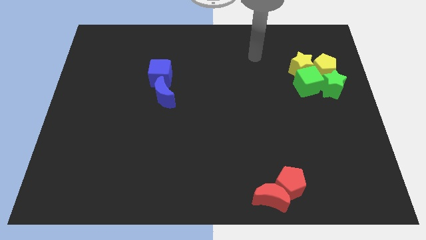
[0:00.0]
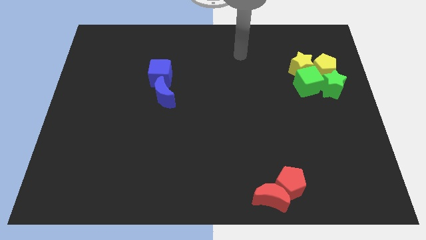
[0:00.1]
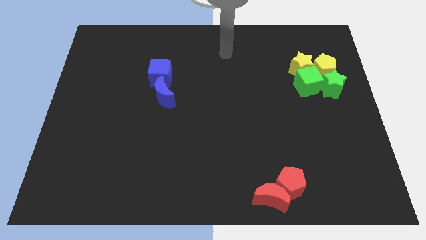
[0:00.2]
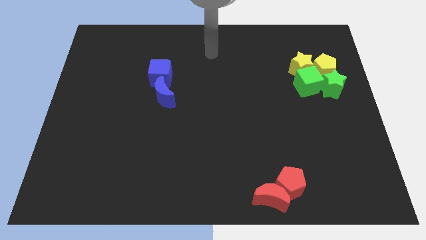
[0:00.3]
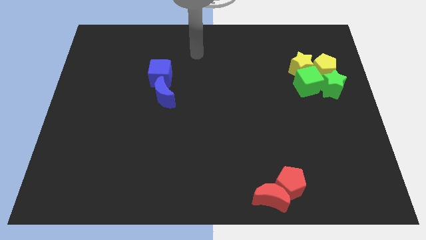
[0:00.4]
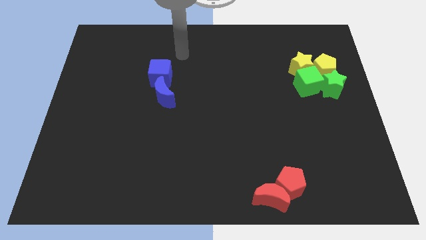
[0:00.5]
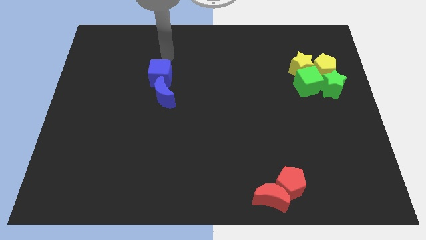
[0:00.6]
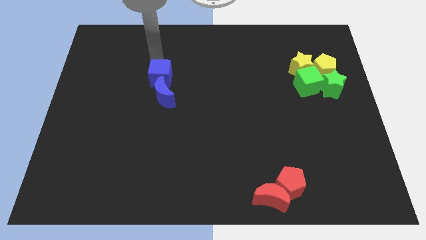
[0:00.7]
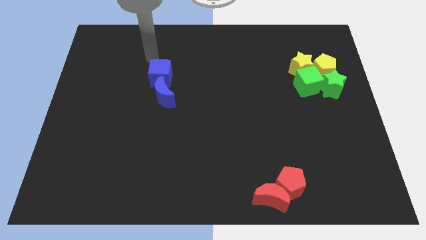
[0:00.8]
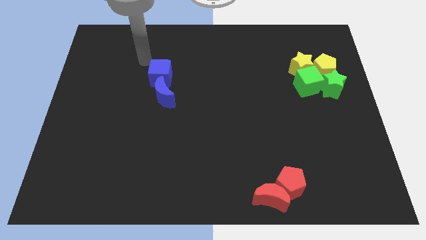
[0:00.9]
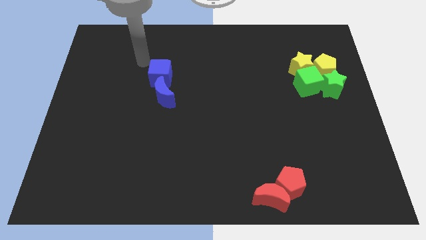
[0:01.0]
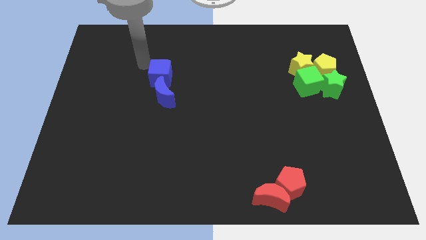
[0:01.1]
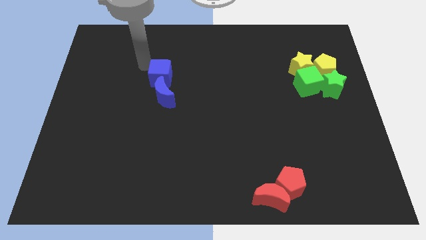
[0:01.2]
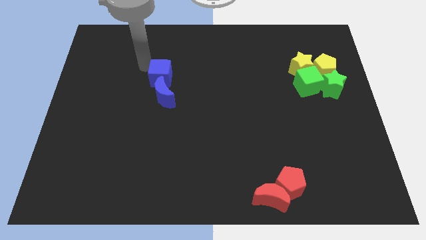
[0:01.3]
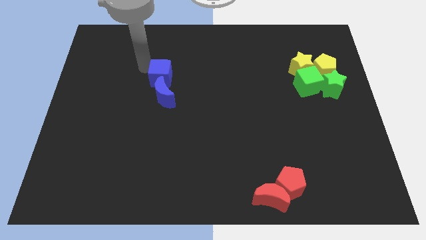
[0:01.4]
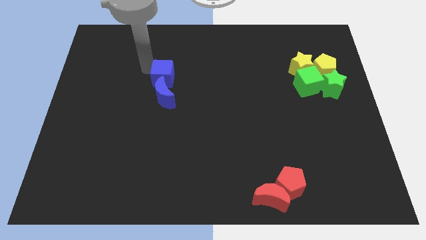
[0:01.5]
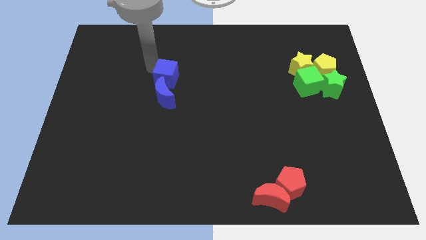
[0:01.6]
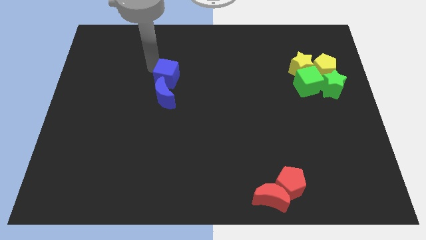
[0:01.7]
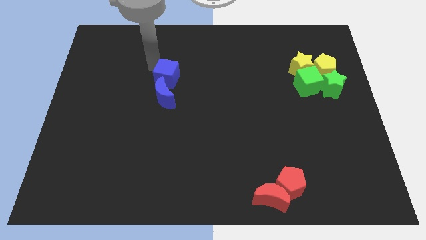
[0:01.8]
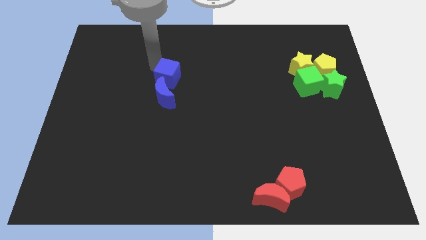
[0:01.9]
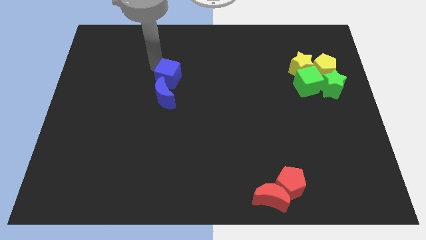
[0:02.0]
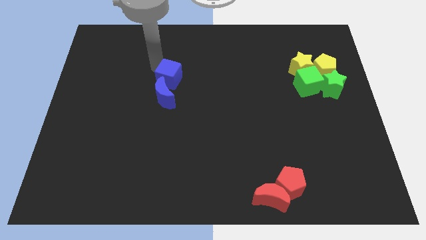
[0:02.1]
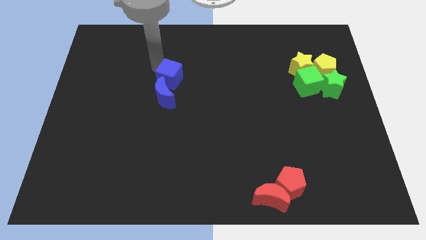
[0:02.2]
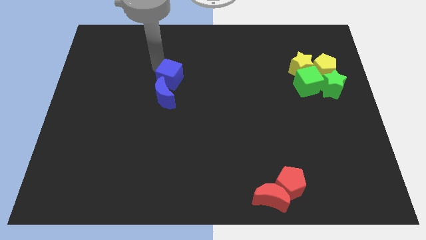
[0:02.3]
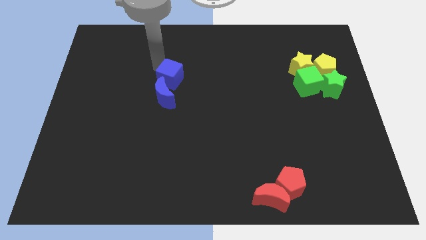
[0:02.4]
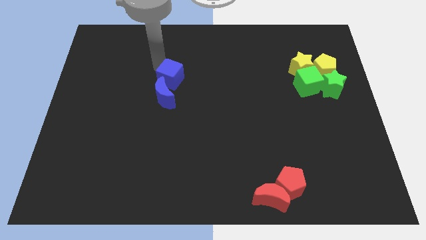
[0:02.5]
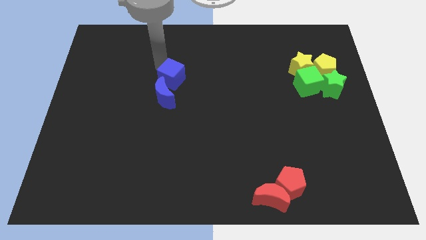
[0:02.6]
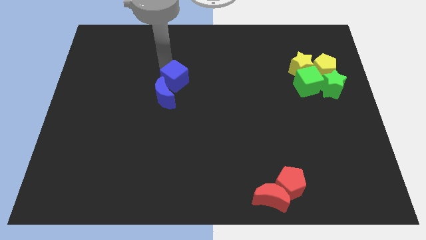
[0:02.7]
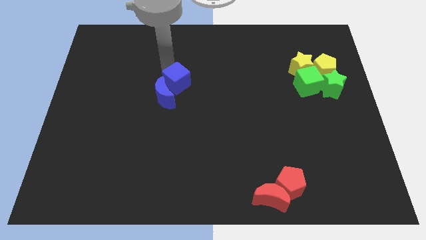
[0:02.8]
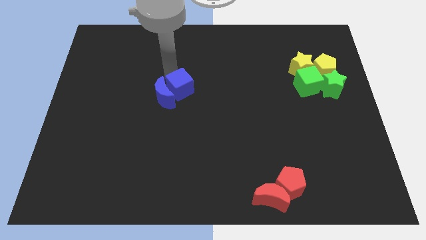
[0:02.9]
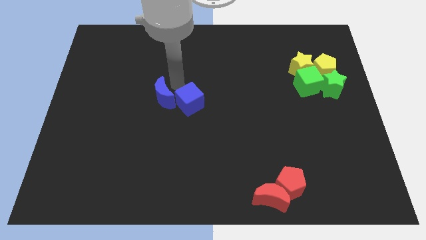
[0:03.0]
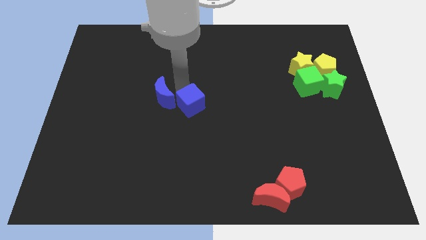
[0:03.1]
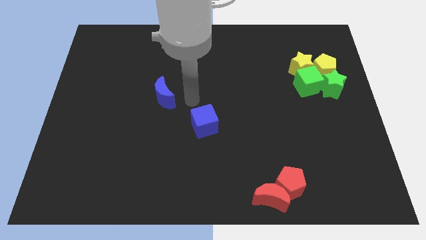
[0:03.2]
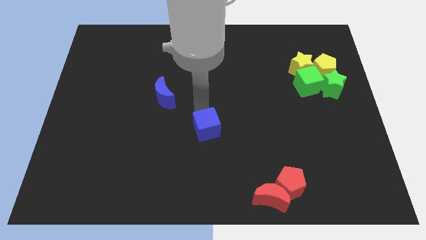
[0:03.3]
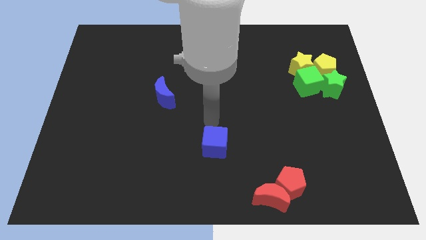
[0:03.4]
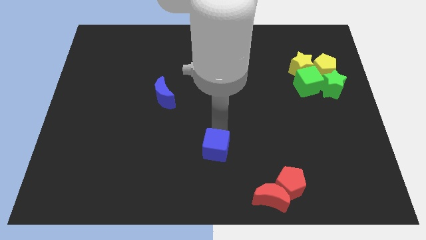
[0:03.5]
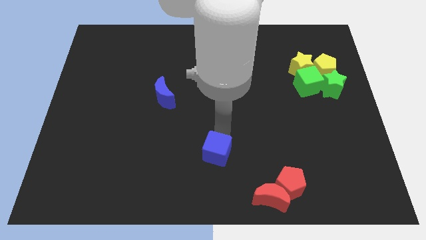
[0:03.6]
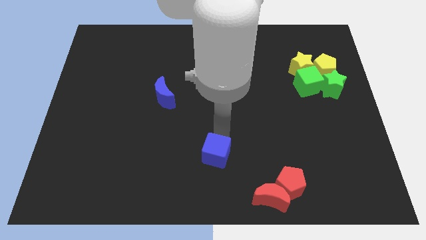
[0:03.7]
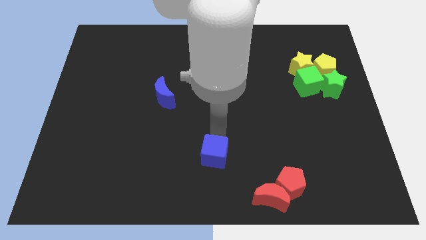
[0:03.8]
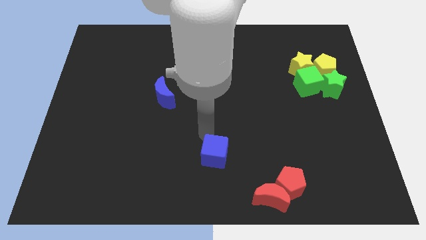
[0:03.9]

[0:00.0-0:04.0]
move blue cube towards the bottom of the board

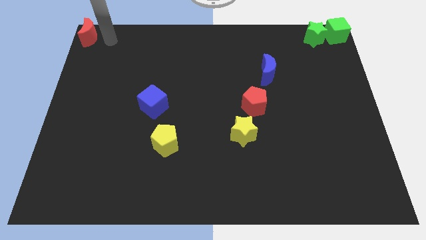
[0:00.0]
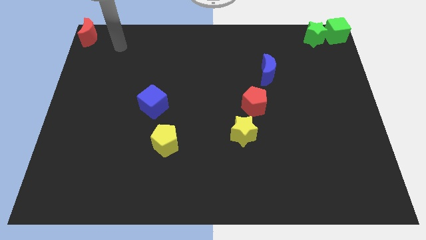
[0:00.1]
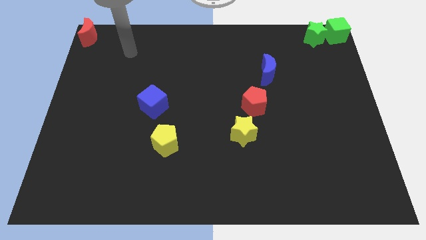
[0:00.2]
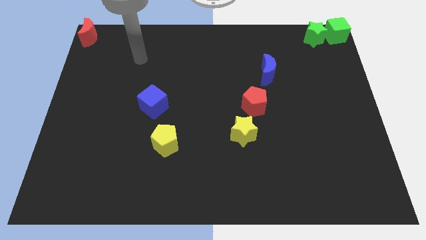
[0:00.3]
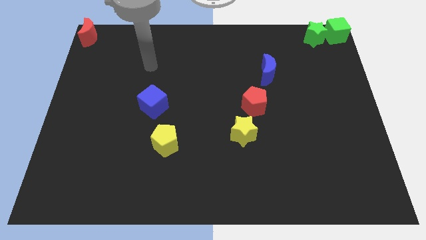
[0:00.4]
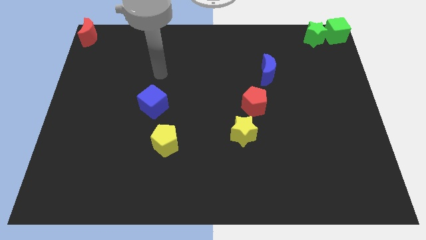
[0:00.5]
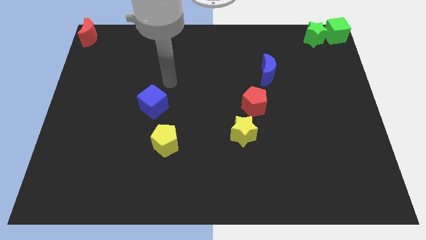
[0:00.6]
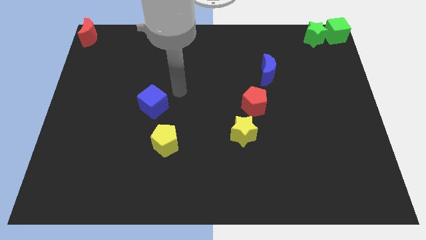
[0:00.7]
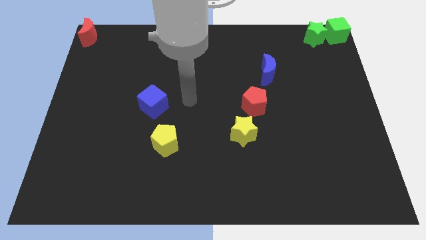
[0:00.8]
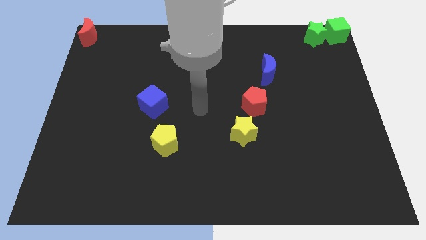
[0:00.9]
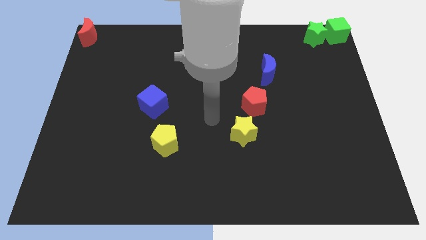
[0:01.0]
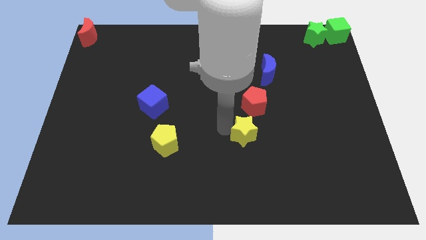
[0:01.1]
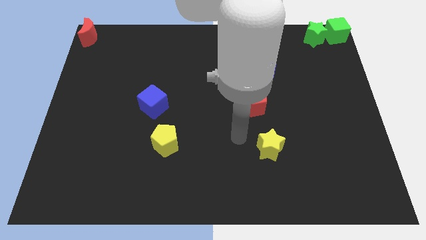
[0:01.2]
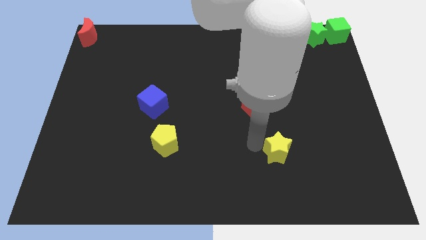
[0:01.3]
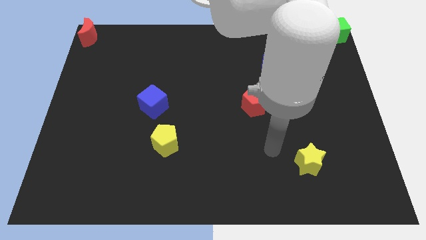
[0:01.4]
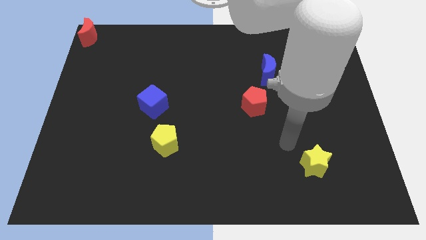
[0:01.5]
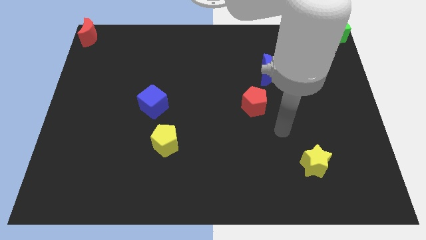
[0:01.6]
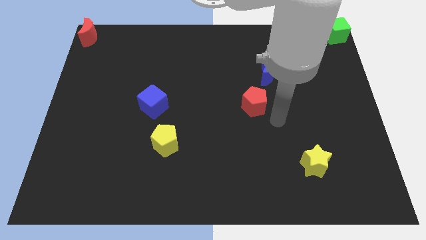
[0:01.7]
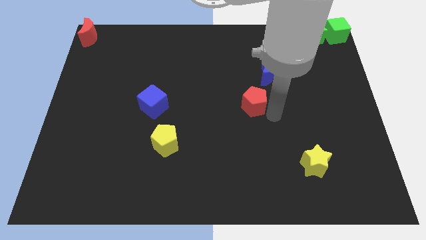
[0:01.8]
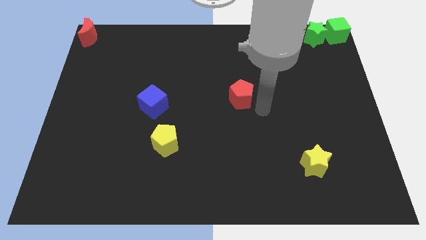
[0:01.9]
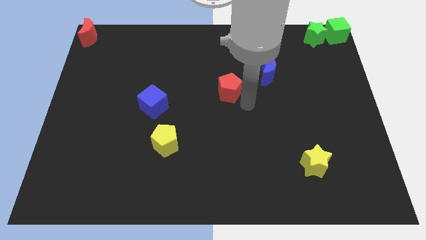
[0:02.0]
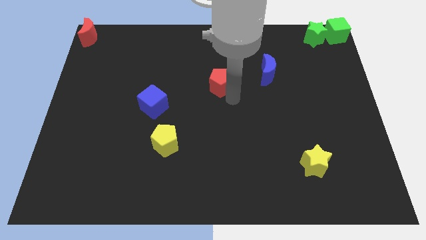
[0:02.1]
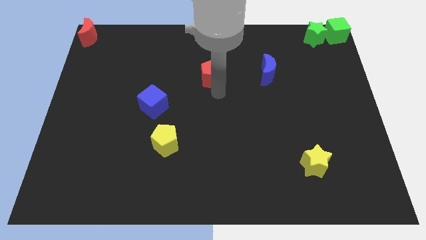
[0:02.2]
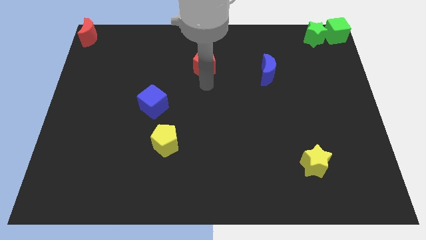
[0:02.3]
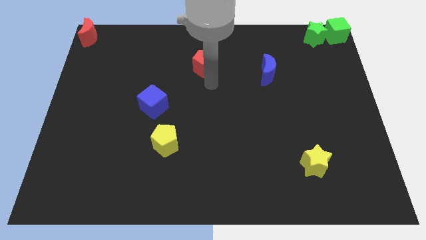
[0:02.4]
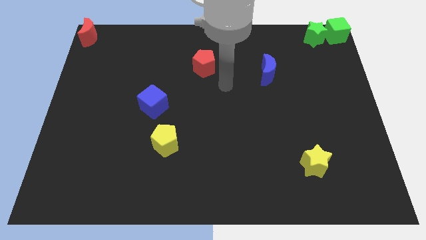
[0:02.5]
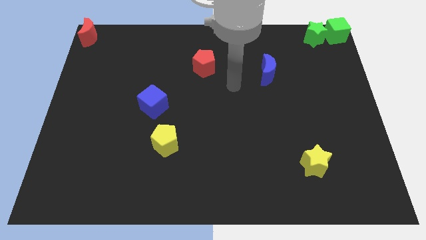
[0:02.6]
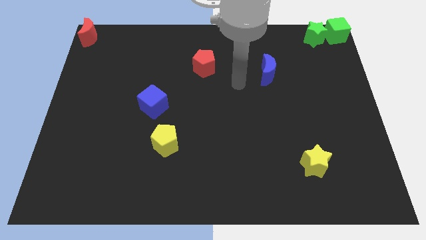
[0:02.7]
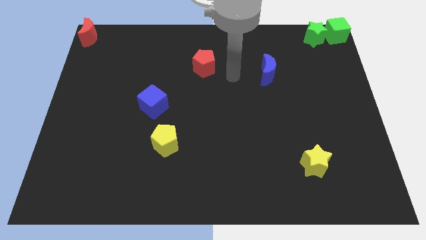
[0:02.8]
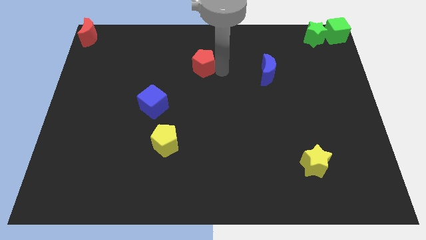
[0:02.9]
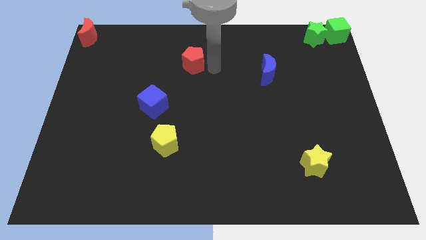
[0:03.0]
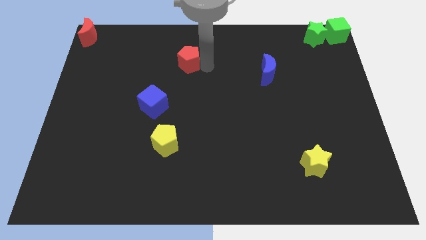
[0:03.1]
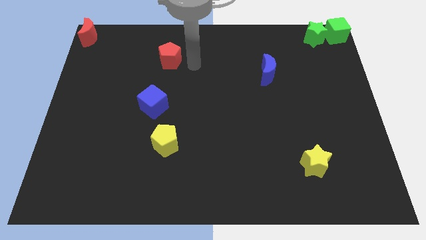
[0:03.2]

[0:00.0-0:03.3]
push the red pentagon and yellow star diagonal to each other

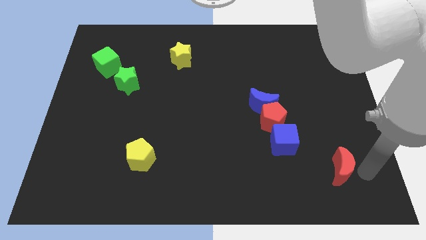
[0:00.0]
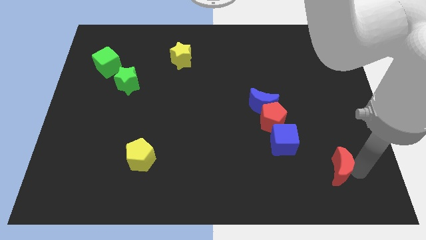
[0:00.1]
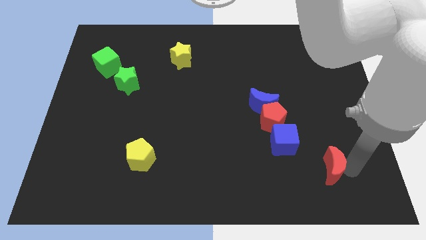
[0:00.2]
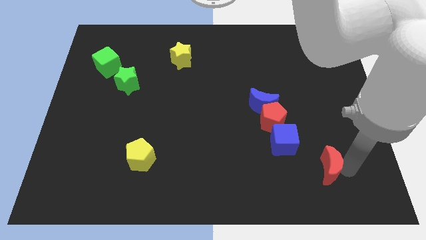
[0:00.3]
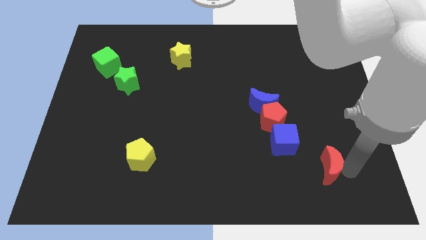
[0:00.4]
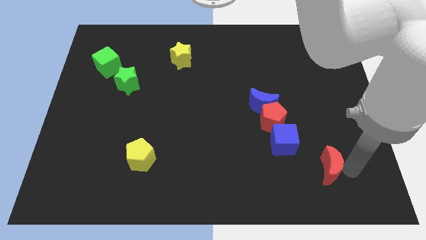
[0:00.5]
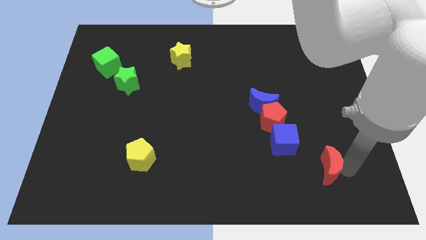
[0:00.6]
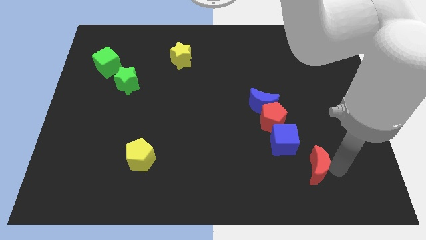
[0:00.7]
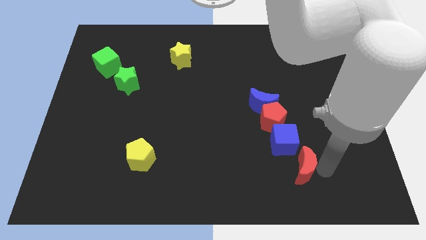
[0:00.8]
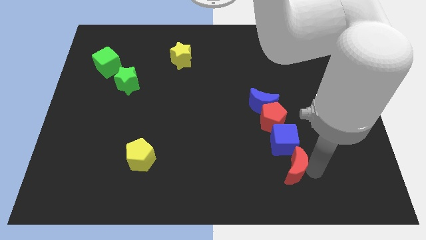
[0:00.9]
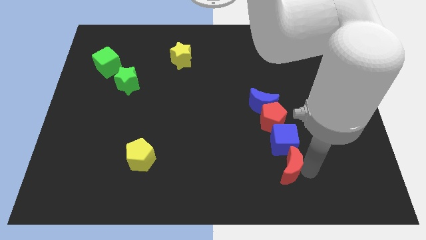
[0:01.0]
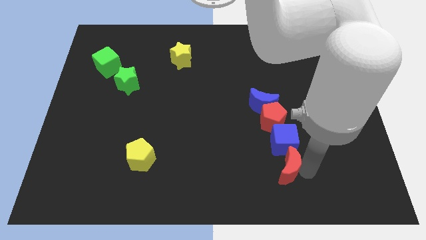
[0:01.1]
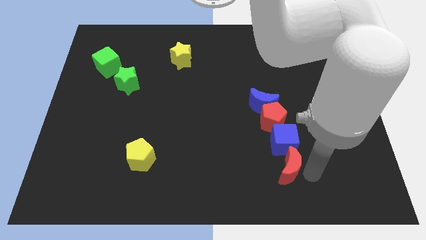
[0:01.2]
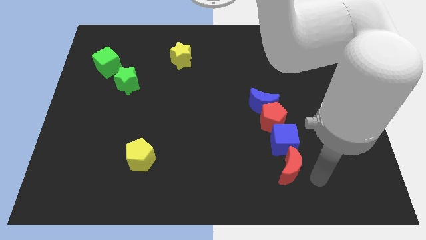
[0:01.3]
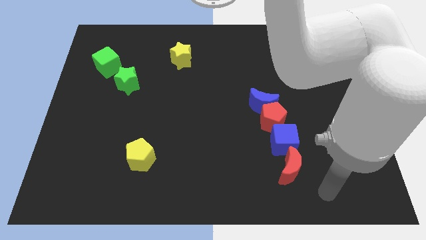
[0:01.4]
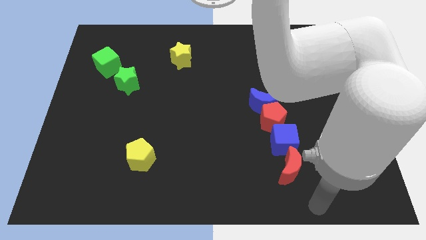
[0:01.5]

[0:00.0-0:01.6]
push the red crescent to the bottom side of the blue cube
